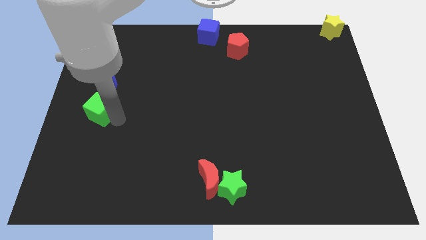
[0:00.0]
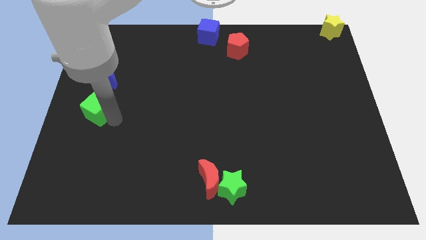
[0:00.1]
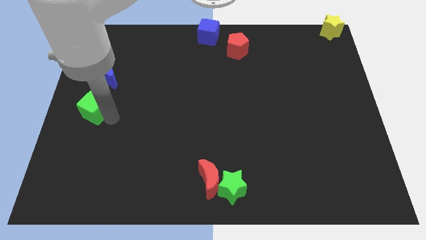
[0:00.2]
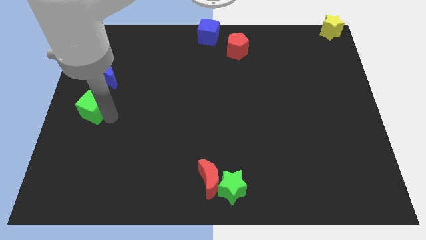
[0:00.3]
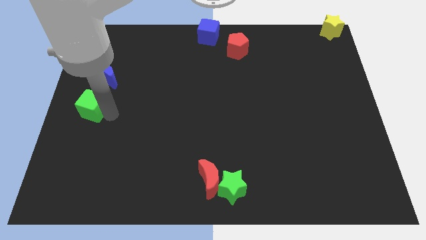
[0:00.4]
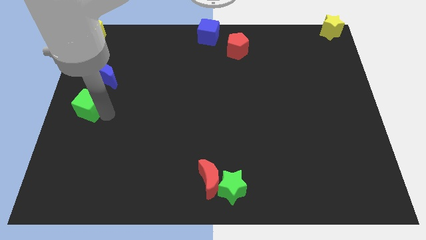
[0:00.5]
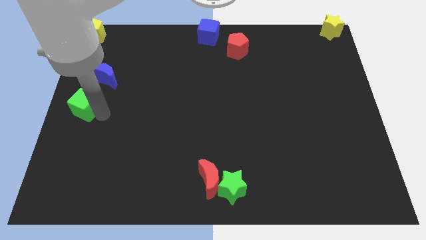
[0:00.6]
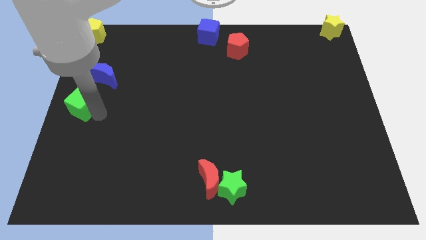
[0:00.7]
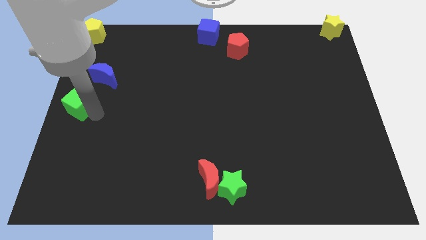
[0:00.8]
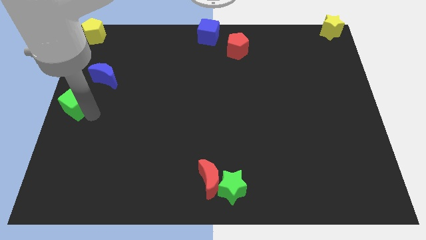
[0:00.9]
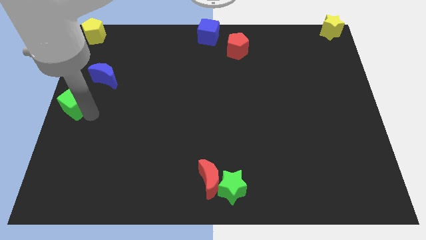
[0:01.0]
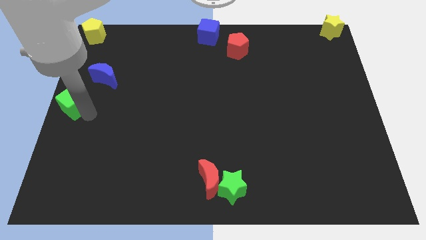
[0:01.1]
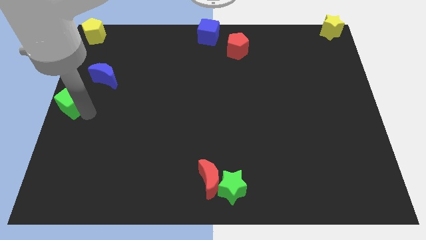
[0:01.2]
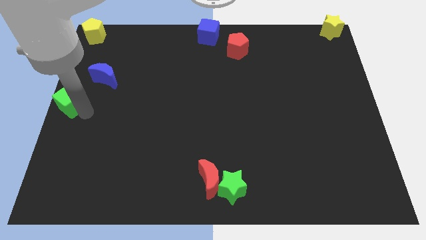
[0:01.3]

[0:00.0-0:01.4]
move the green cube to the left center of the board

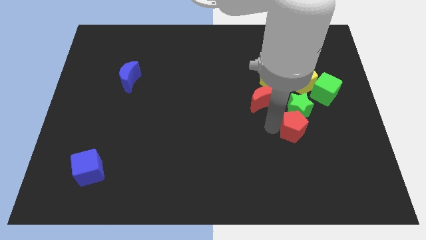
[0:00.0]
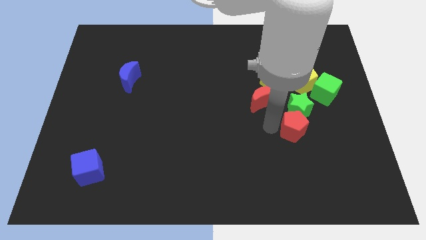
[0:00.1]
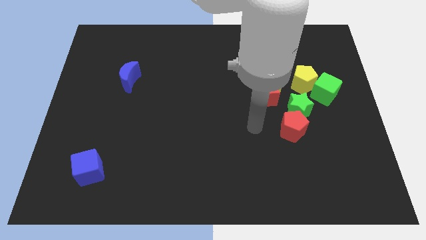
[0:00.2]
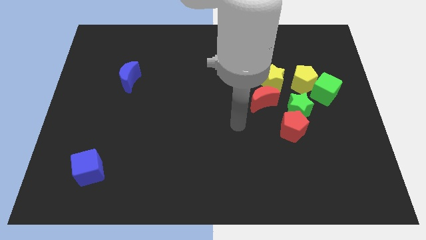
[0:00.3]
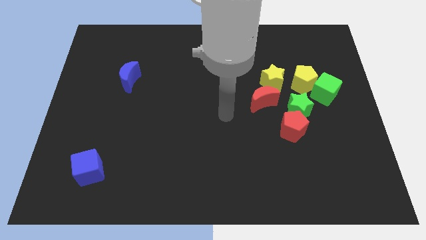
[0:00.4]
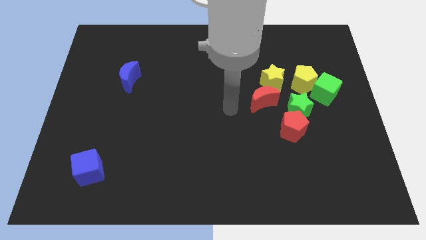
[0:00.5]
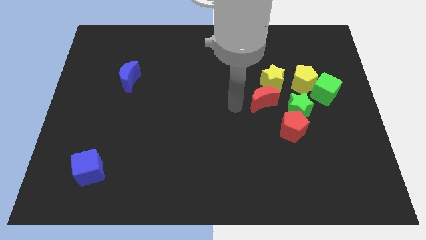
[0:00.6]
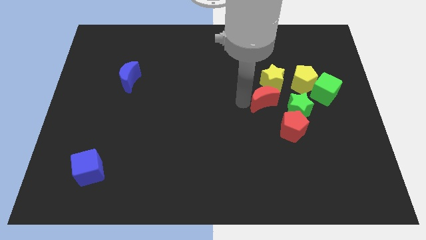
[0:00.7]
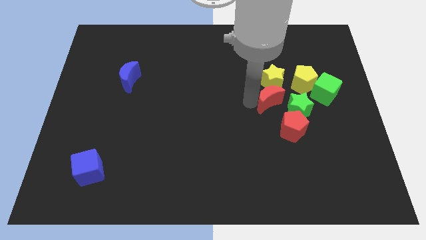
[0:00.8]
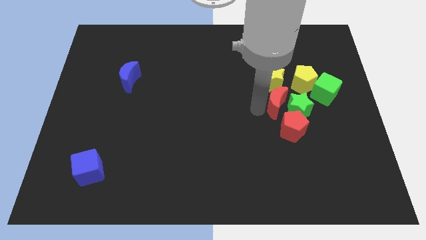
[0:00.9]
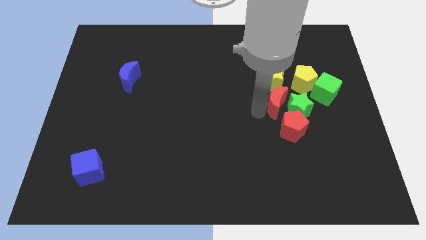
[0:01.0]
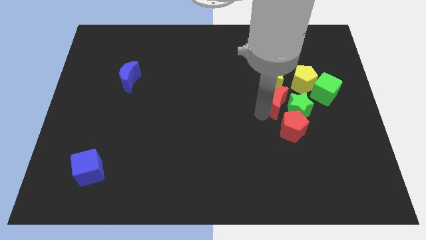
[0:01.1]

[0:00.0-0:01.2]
place the red moon to the left side of green star

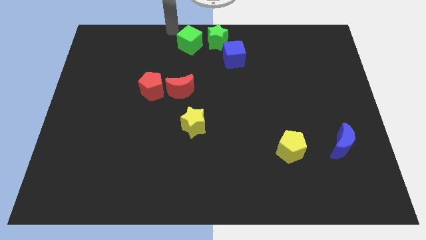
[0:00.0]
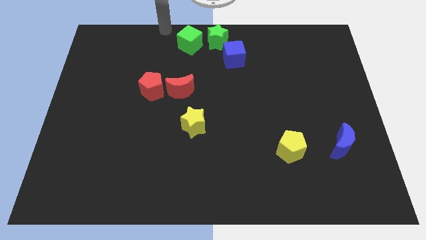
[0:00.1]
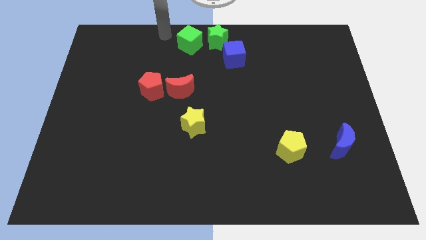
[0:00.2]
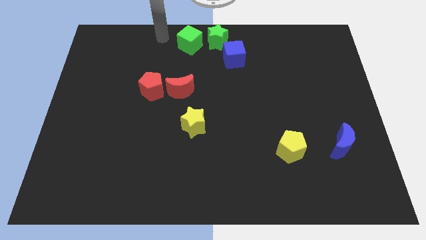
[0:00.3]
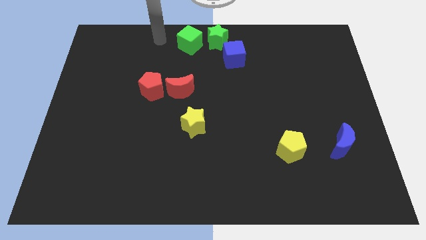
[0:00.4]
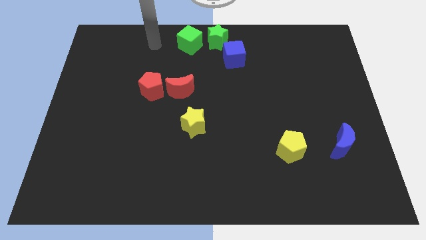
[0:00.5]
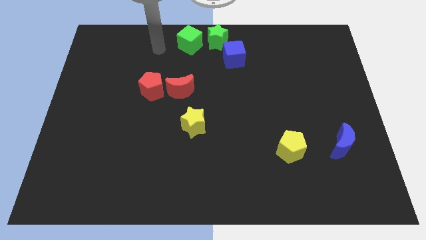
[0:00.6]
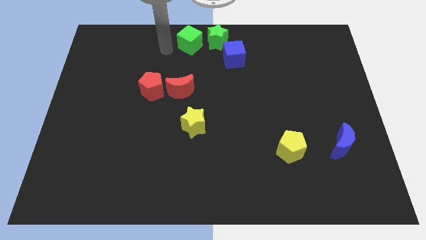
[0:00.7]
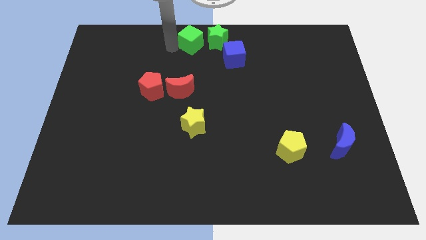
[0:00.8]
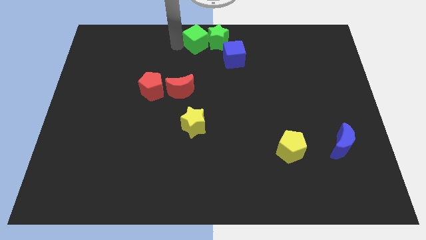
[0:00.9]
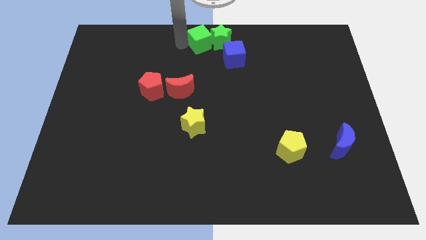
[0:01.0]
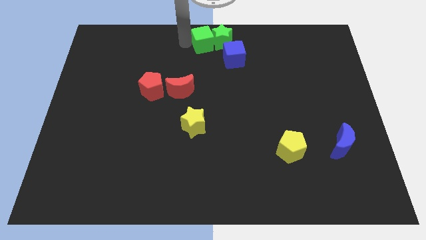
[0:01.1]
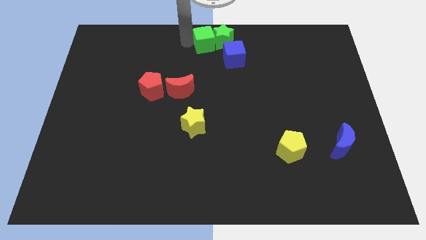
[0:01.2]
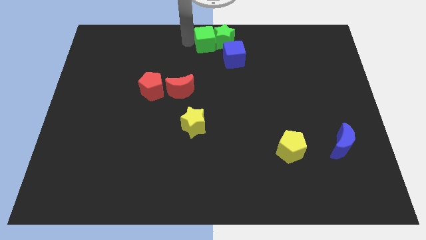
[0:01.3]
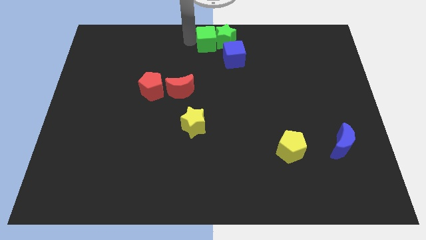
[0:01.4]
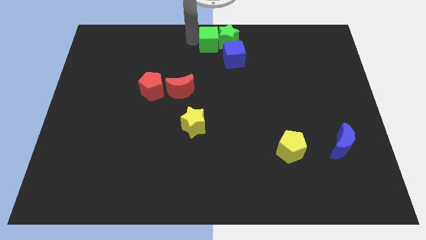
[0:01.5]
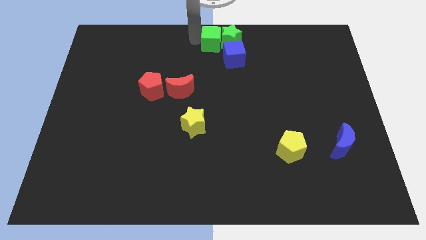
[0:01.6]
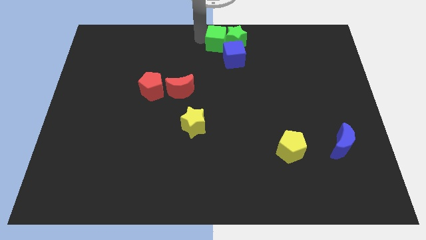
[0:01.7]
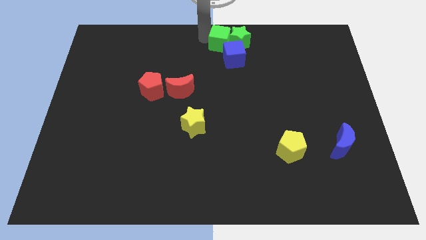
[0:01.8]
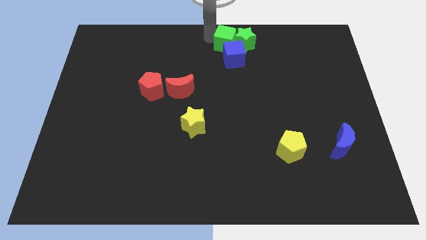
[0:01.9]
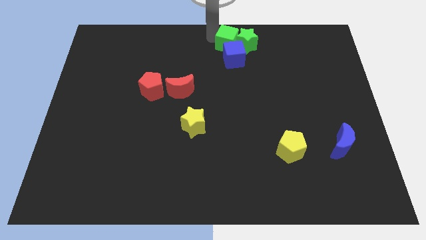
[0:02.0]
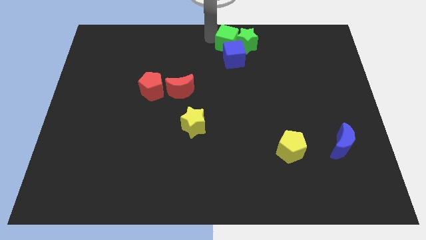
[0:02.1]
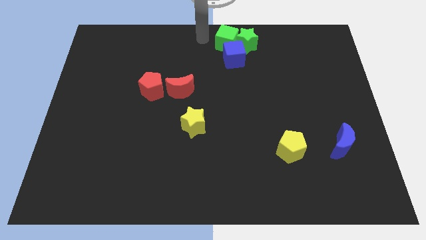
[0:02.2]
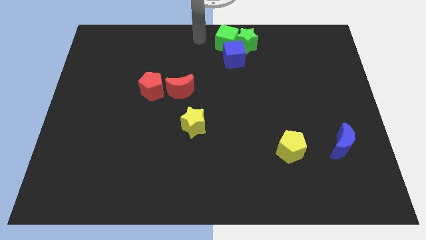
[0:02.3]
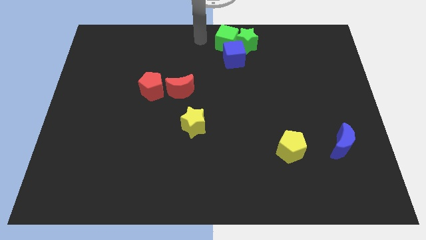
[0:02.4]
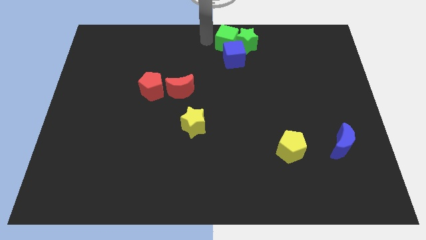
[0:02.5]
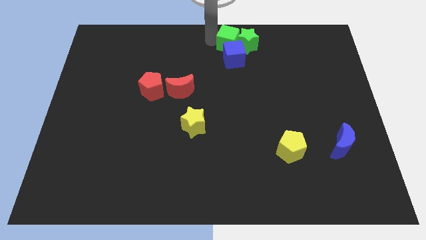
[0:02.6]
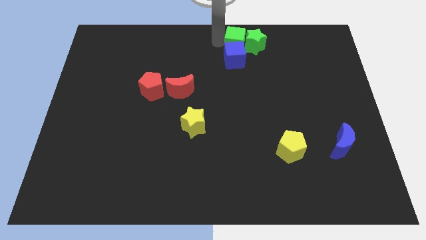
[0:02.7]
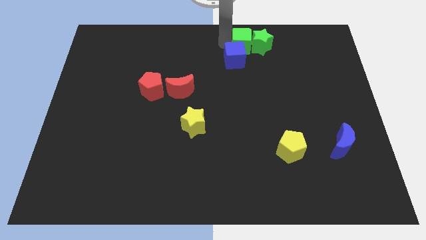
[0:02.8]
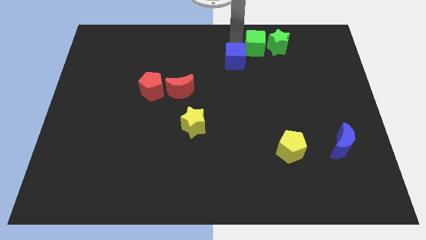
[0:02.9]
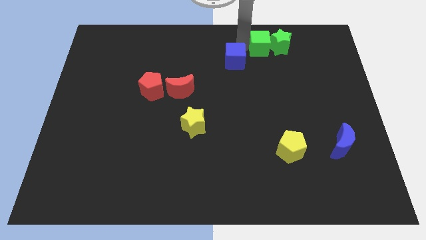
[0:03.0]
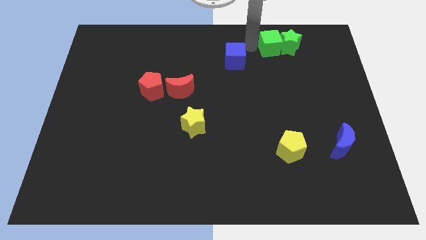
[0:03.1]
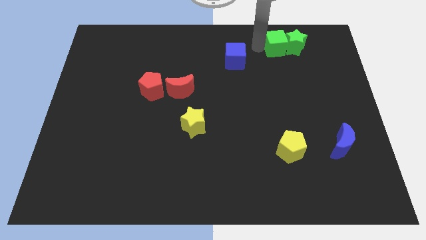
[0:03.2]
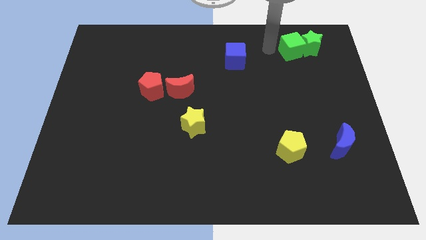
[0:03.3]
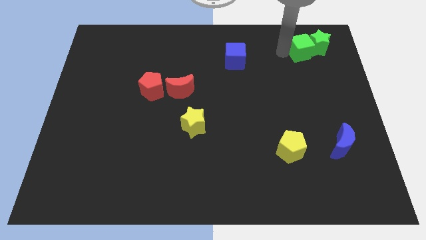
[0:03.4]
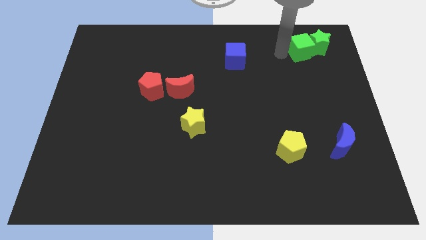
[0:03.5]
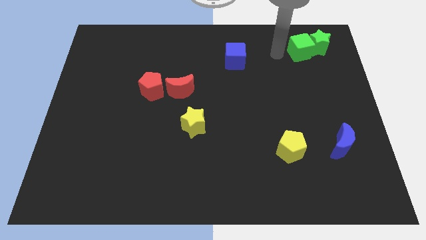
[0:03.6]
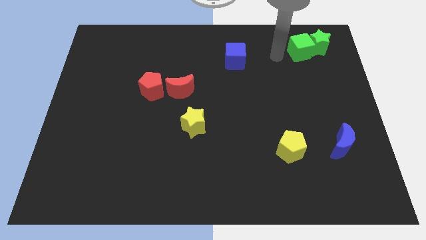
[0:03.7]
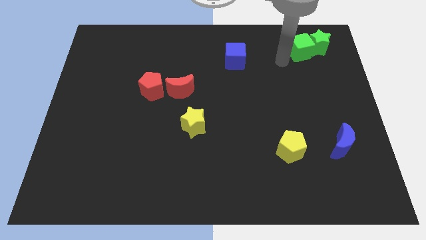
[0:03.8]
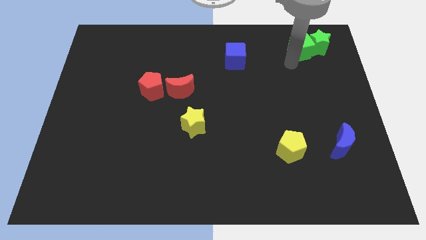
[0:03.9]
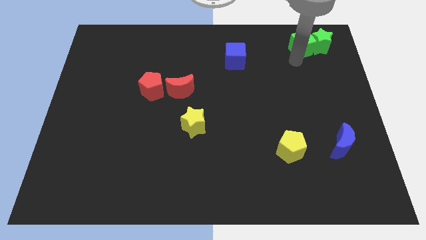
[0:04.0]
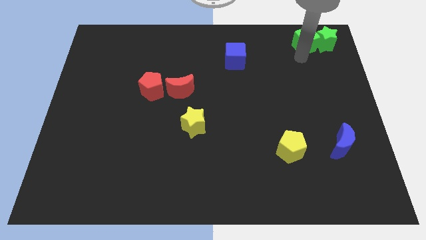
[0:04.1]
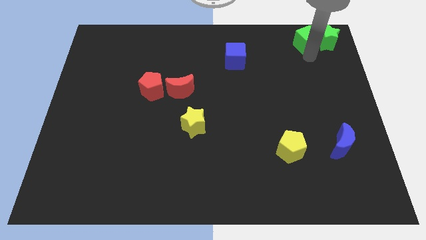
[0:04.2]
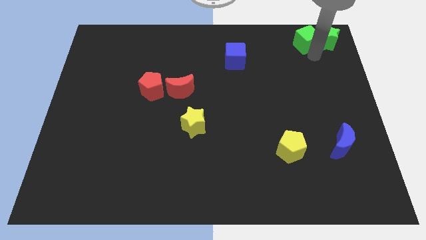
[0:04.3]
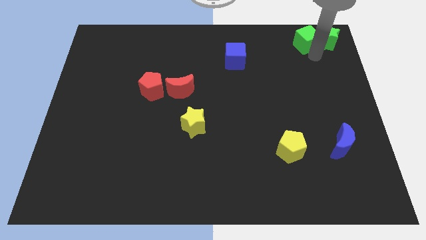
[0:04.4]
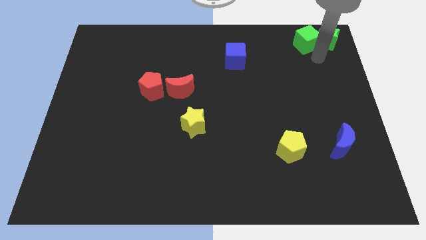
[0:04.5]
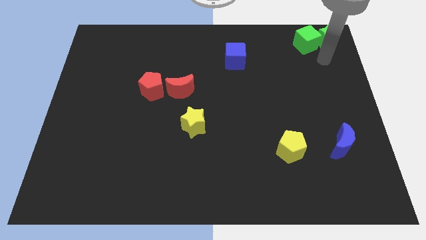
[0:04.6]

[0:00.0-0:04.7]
push the group of green blocks vertically at the top side of the blue moon

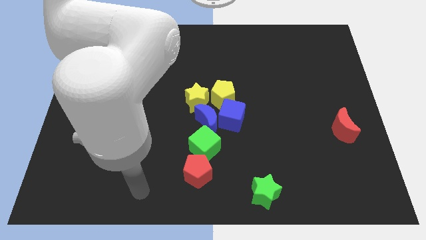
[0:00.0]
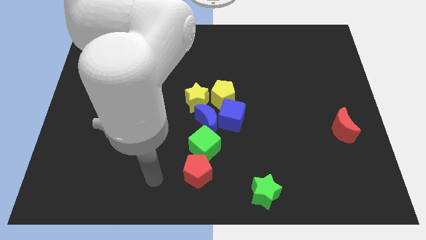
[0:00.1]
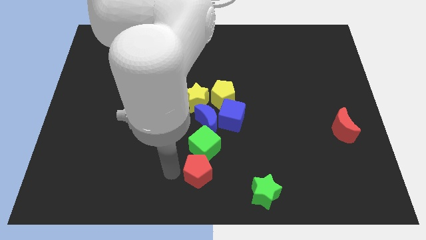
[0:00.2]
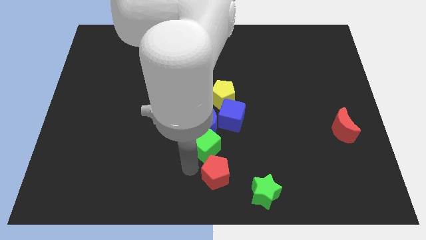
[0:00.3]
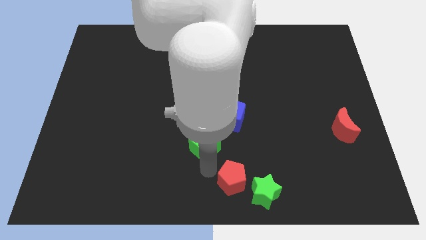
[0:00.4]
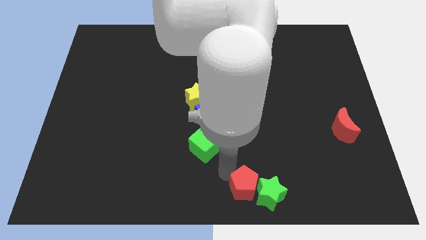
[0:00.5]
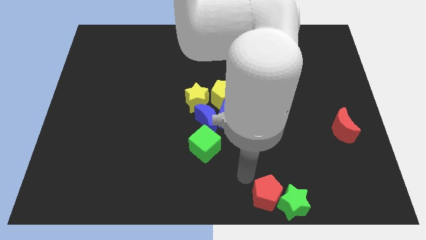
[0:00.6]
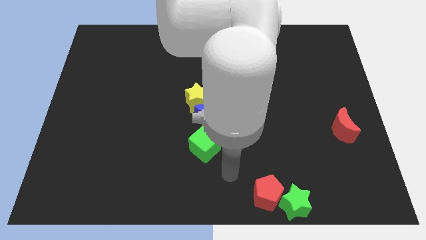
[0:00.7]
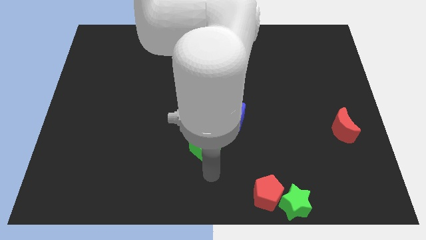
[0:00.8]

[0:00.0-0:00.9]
push the red pentagon towards the green star

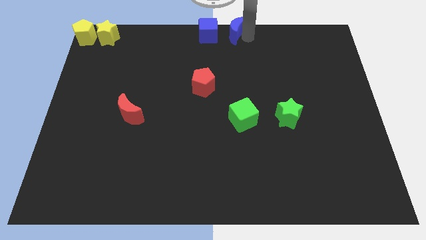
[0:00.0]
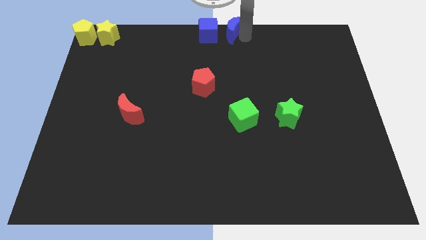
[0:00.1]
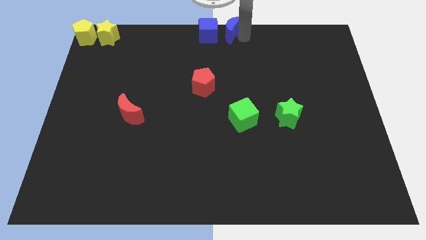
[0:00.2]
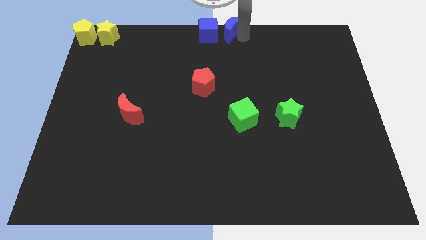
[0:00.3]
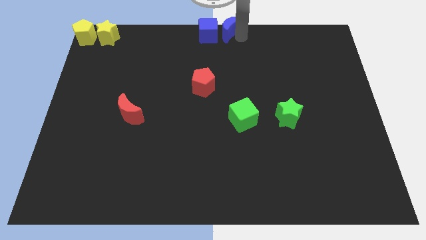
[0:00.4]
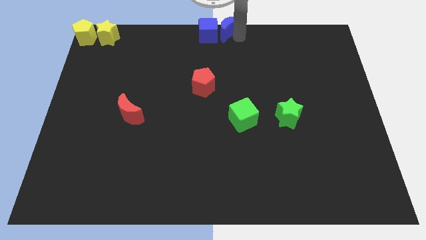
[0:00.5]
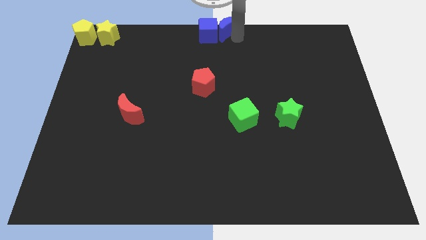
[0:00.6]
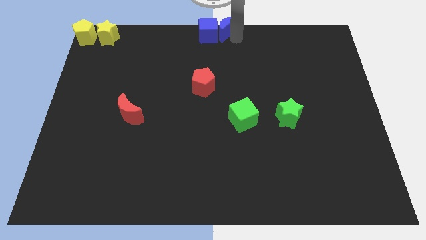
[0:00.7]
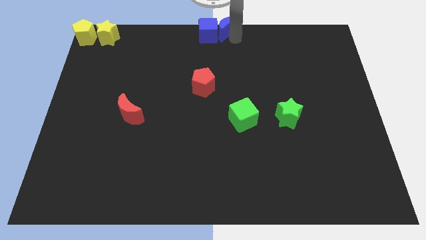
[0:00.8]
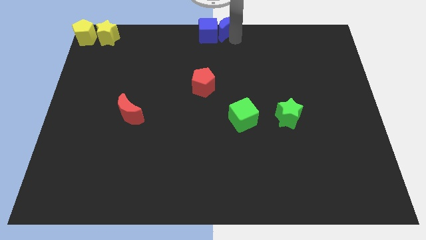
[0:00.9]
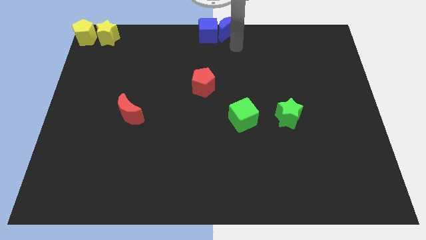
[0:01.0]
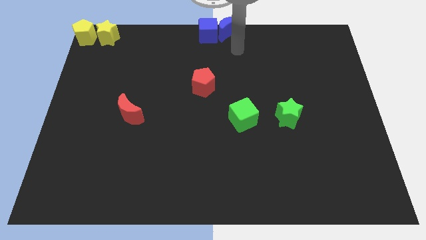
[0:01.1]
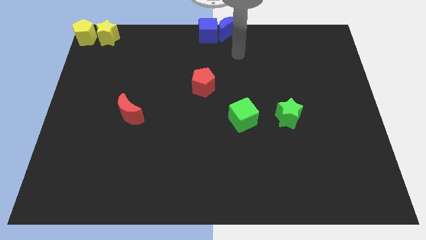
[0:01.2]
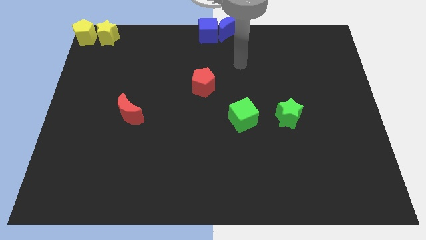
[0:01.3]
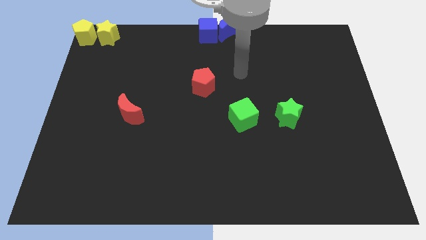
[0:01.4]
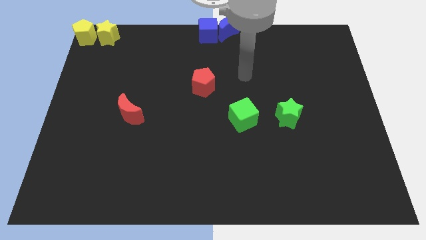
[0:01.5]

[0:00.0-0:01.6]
slide the blue crescent into the blue cube
